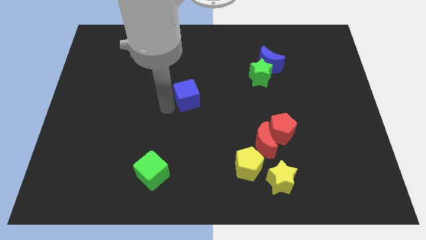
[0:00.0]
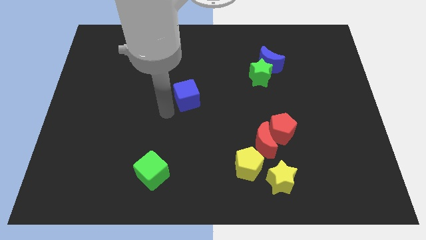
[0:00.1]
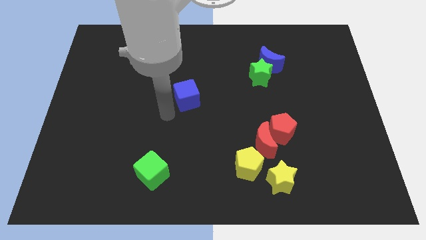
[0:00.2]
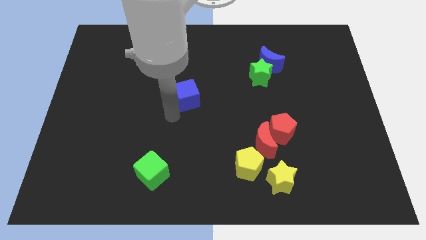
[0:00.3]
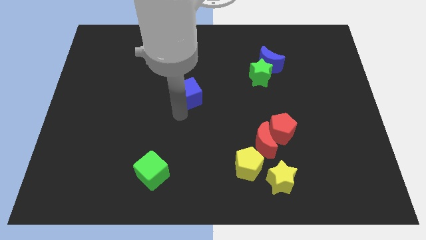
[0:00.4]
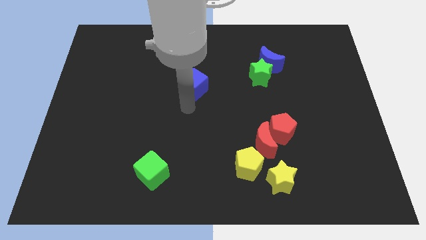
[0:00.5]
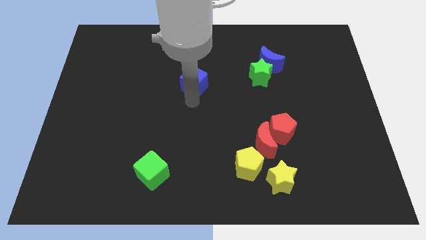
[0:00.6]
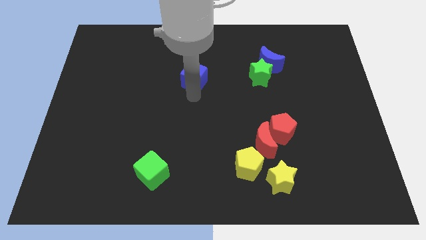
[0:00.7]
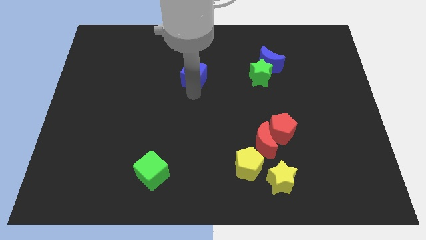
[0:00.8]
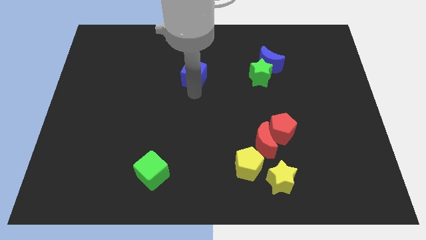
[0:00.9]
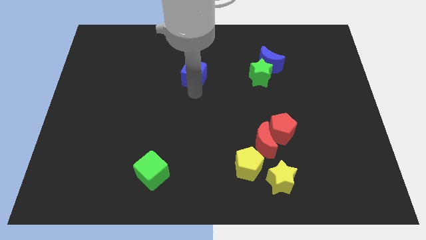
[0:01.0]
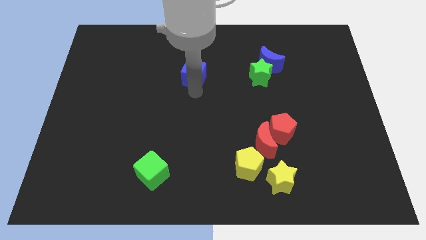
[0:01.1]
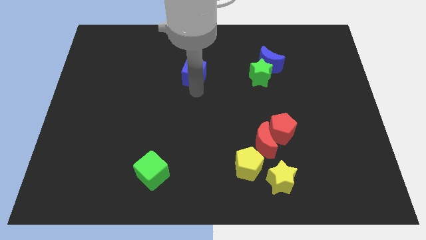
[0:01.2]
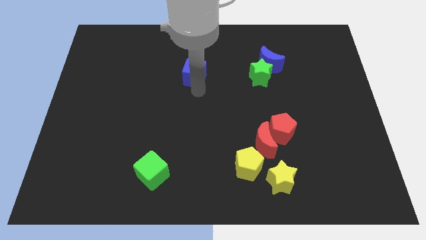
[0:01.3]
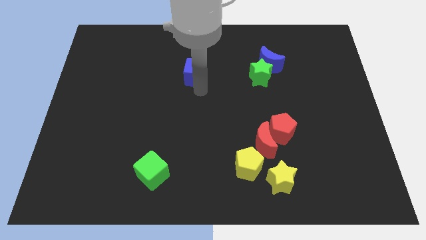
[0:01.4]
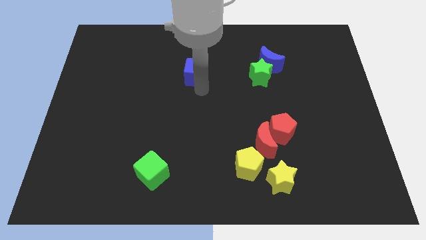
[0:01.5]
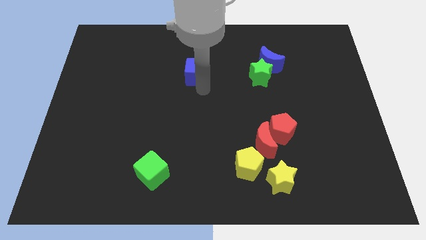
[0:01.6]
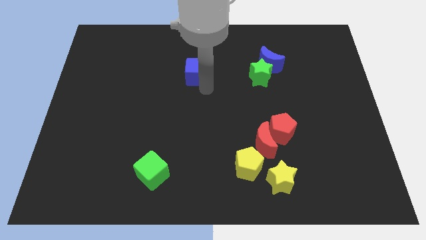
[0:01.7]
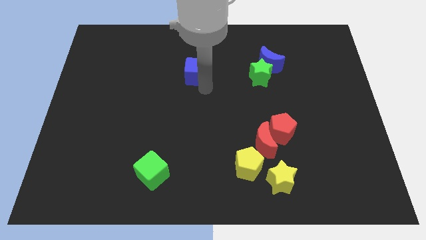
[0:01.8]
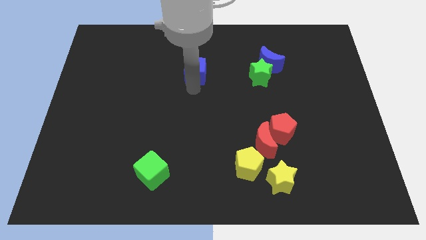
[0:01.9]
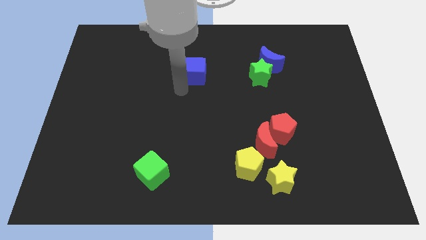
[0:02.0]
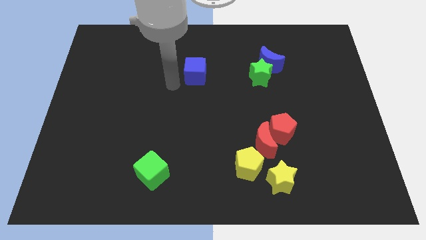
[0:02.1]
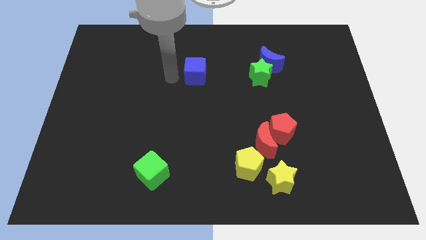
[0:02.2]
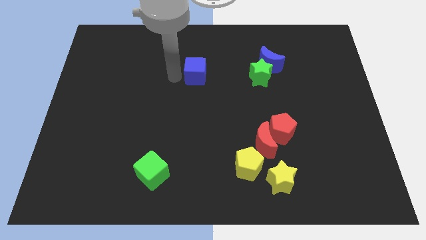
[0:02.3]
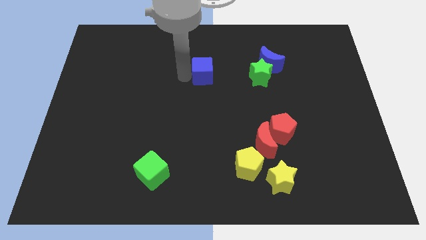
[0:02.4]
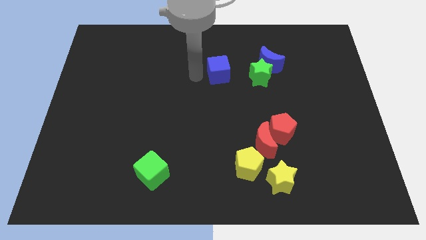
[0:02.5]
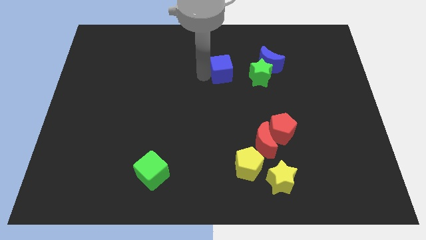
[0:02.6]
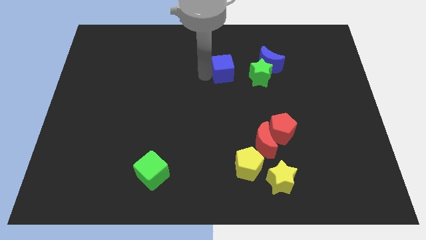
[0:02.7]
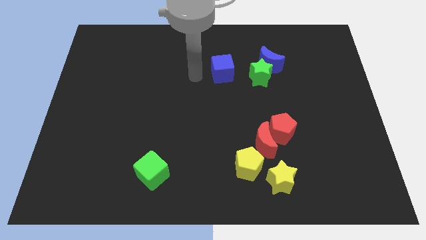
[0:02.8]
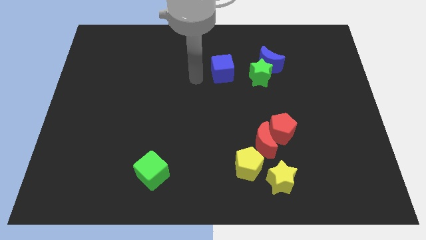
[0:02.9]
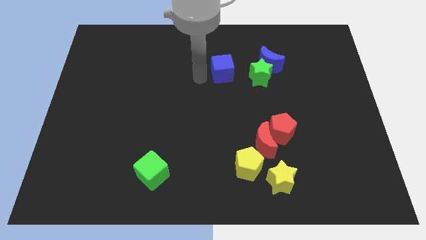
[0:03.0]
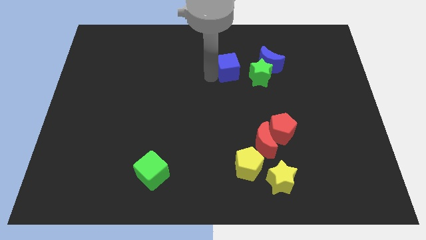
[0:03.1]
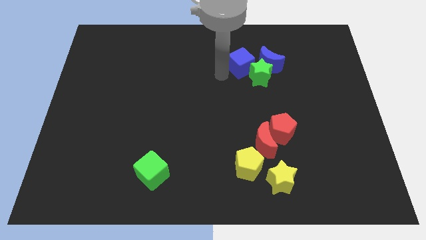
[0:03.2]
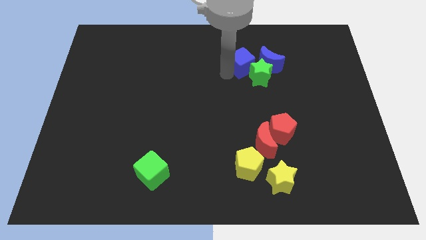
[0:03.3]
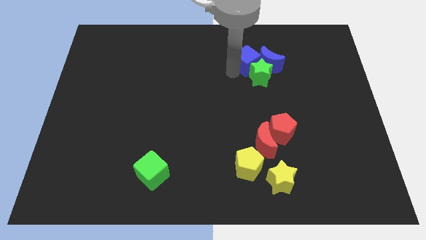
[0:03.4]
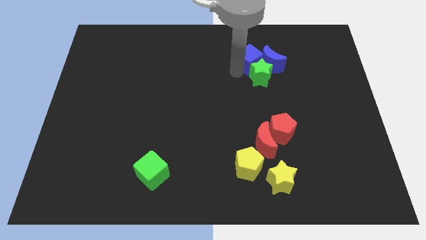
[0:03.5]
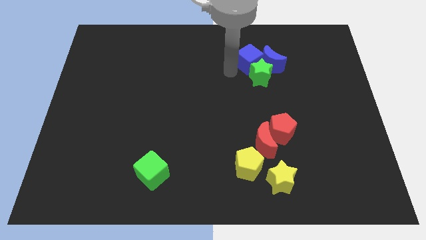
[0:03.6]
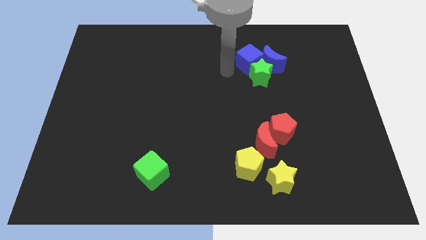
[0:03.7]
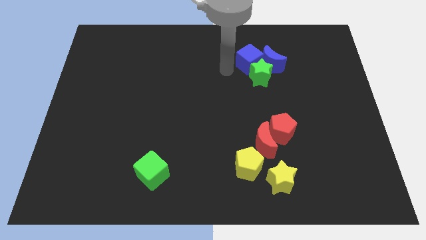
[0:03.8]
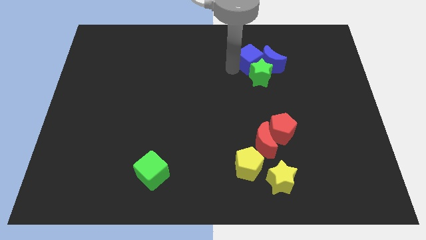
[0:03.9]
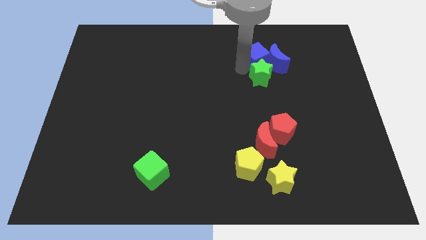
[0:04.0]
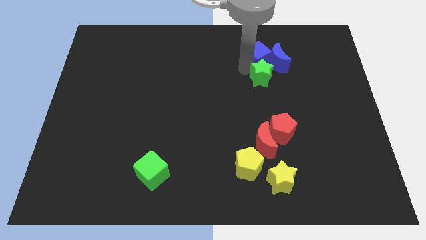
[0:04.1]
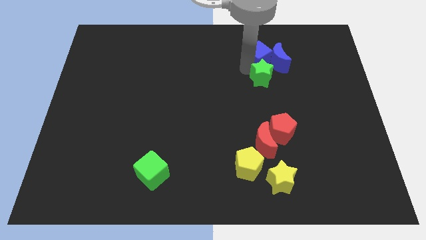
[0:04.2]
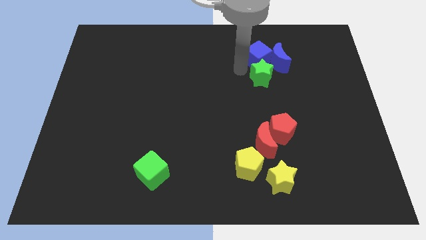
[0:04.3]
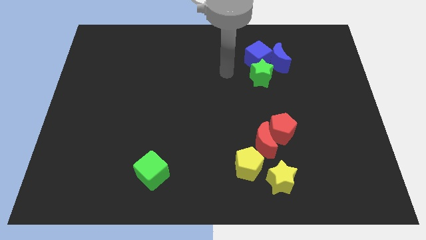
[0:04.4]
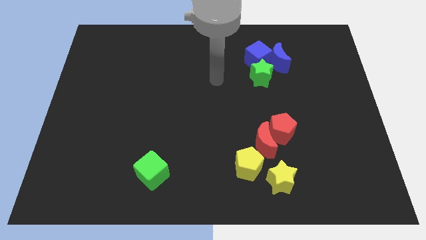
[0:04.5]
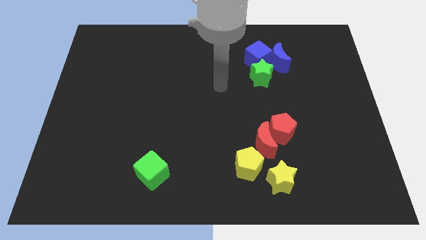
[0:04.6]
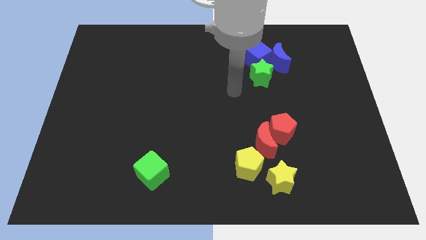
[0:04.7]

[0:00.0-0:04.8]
move blue cube into the blue moon

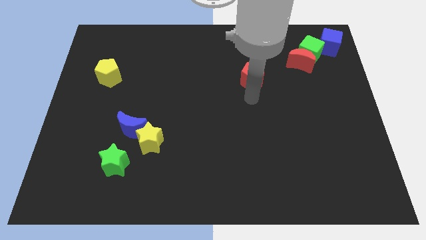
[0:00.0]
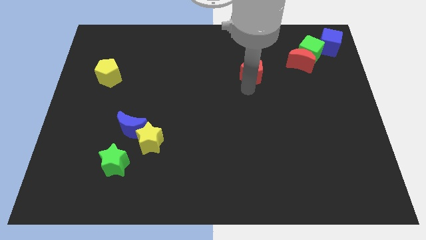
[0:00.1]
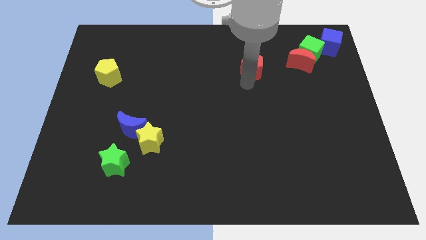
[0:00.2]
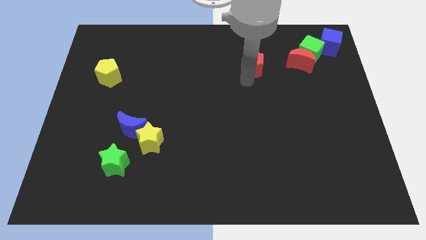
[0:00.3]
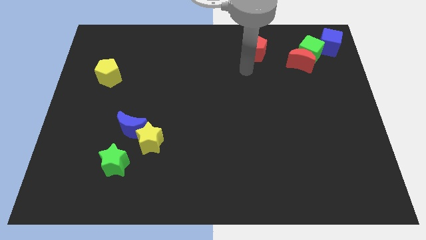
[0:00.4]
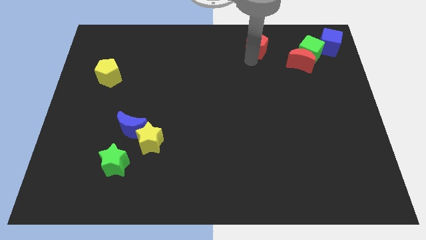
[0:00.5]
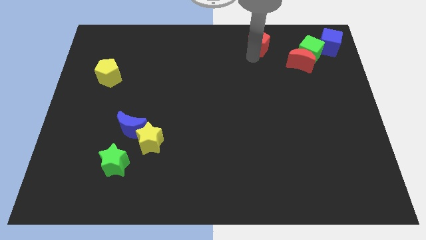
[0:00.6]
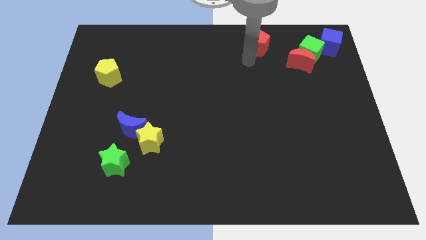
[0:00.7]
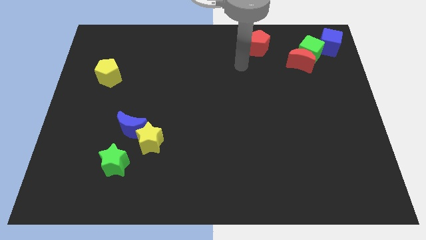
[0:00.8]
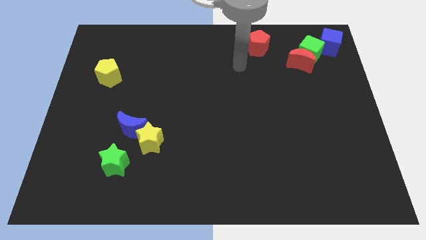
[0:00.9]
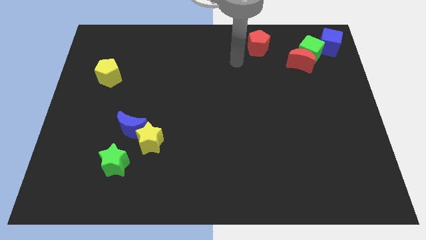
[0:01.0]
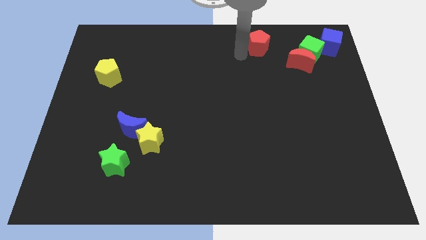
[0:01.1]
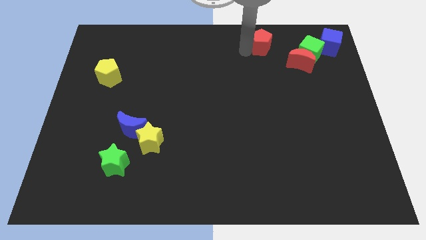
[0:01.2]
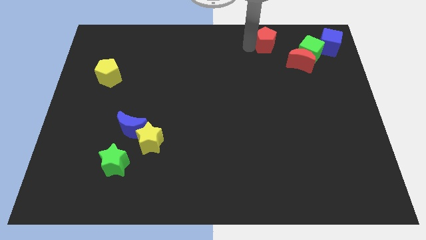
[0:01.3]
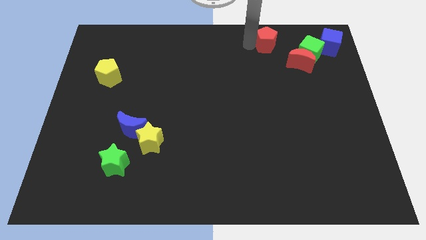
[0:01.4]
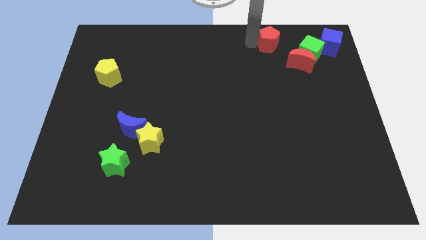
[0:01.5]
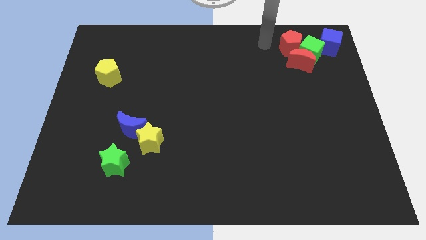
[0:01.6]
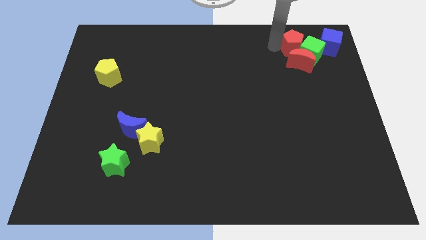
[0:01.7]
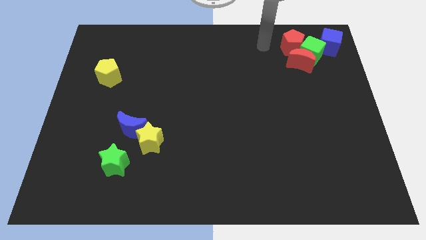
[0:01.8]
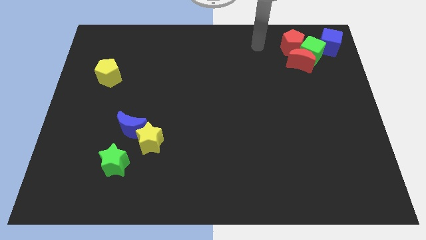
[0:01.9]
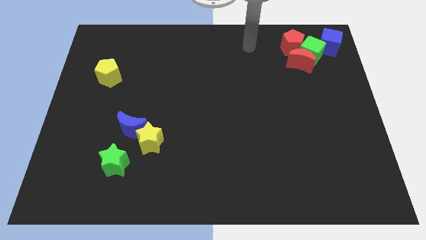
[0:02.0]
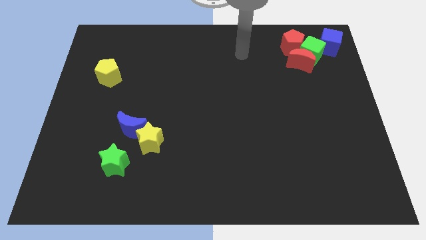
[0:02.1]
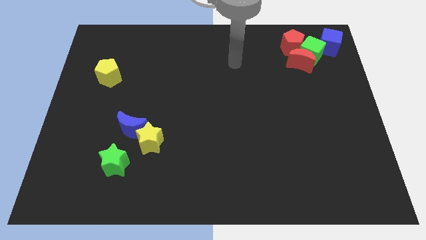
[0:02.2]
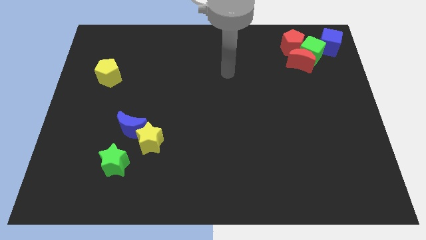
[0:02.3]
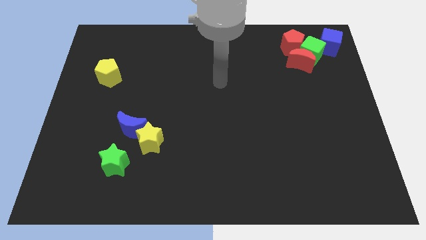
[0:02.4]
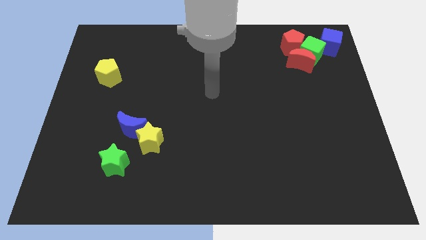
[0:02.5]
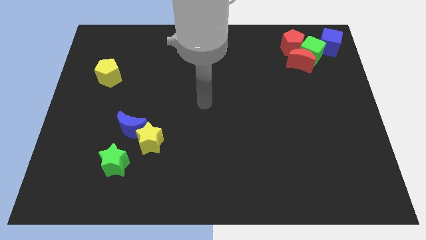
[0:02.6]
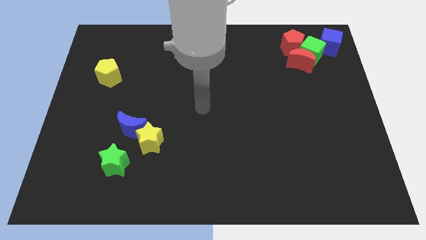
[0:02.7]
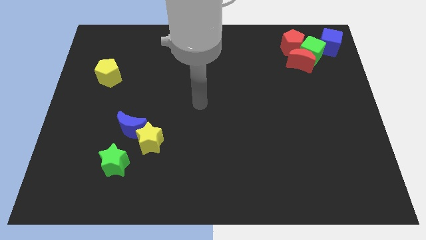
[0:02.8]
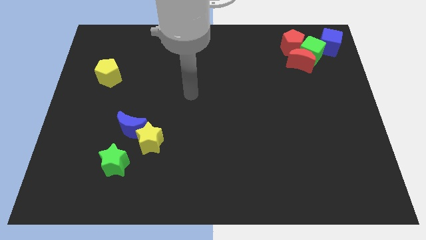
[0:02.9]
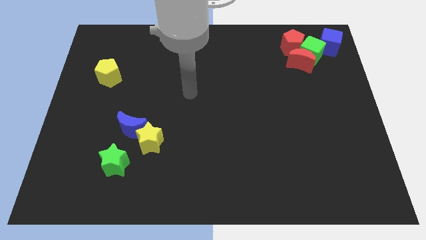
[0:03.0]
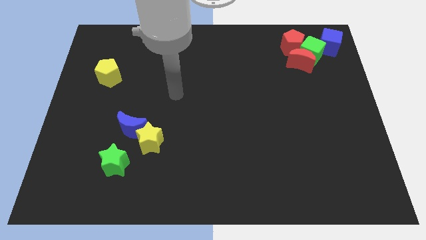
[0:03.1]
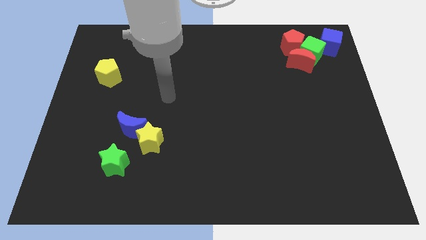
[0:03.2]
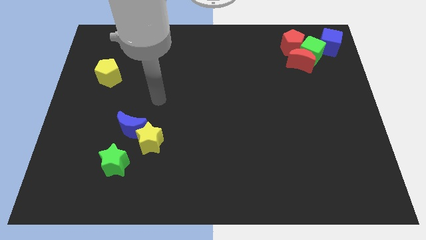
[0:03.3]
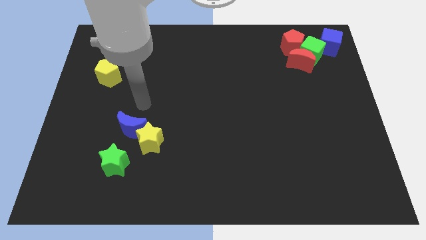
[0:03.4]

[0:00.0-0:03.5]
move the red pentagon into the top left of the green cube

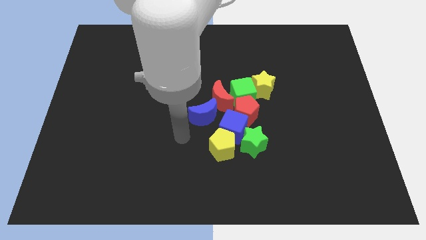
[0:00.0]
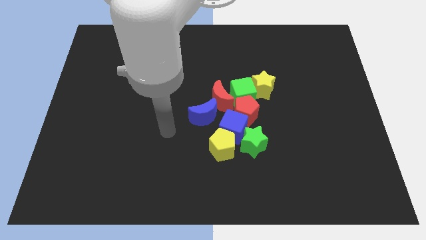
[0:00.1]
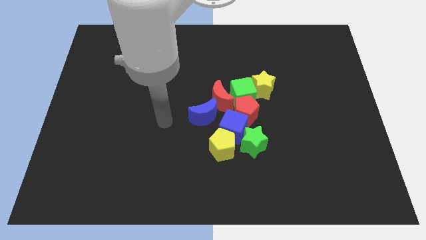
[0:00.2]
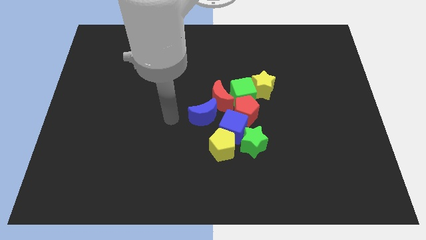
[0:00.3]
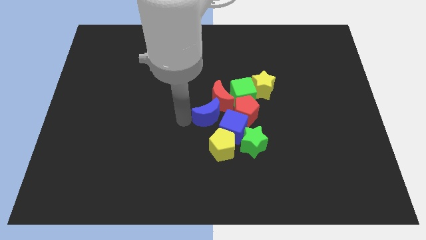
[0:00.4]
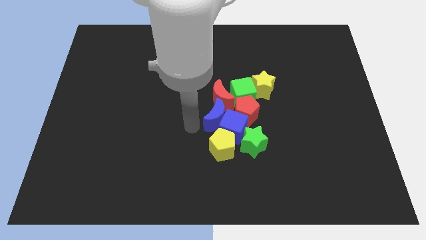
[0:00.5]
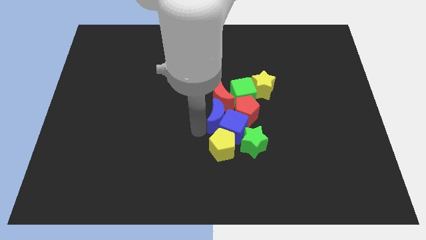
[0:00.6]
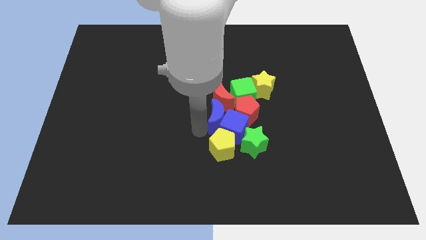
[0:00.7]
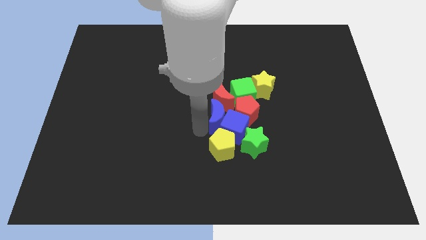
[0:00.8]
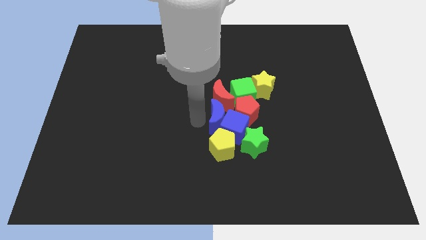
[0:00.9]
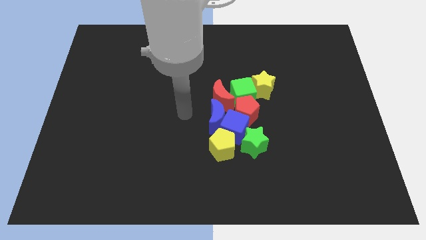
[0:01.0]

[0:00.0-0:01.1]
place blue crescent beside blue cube
